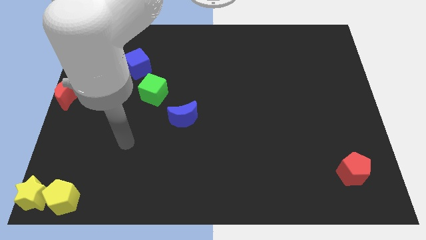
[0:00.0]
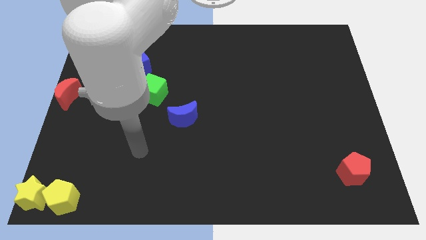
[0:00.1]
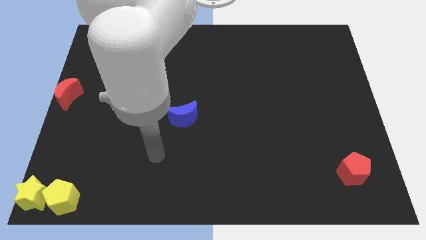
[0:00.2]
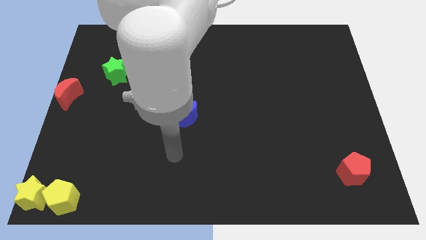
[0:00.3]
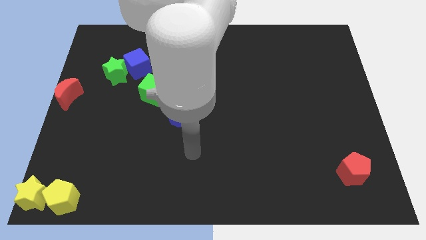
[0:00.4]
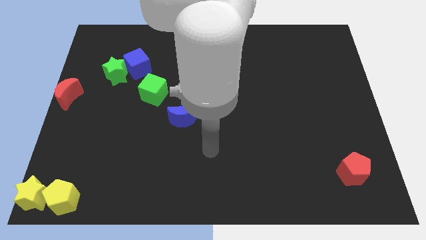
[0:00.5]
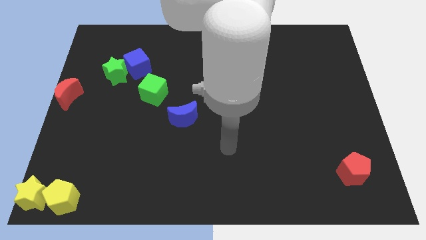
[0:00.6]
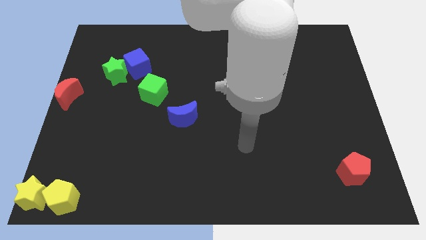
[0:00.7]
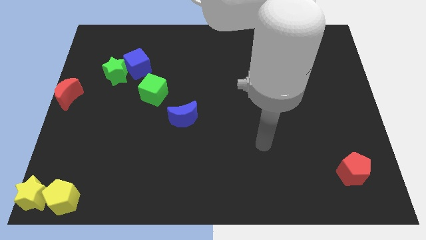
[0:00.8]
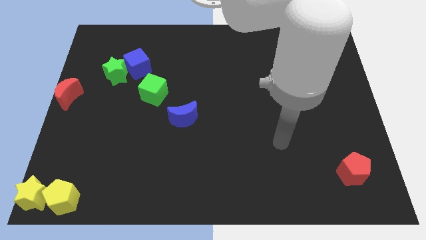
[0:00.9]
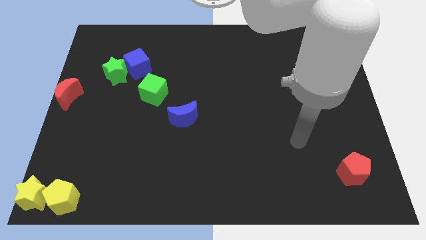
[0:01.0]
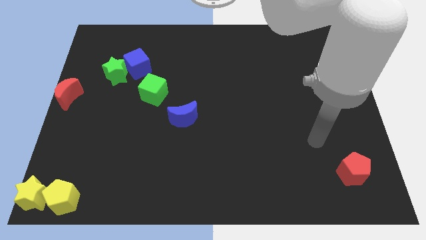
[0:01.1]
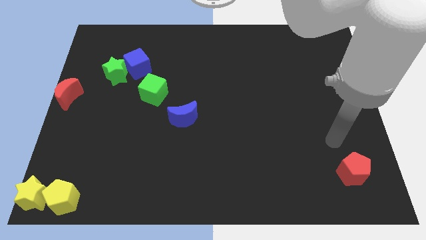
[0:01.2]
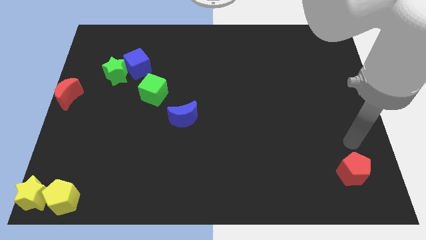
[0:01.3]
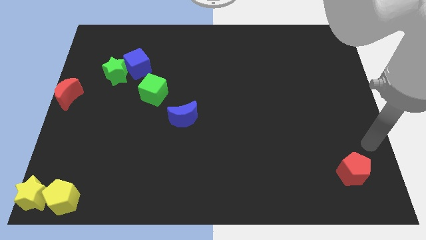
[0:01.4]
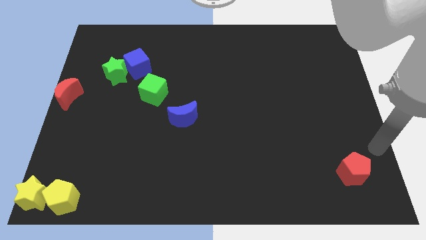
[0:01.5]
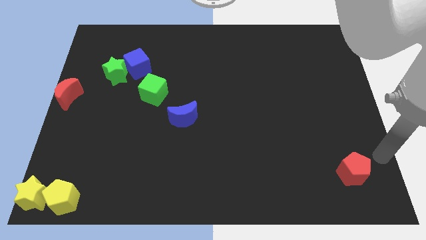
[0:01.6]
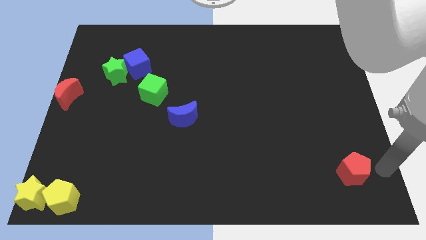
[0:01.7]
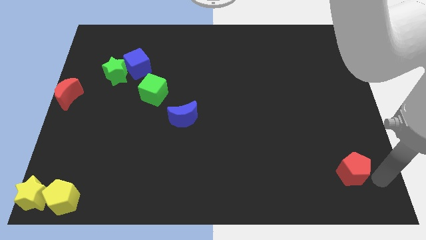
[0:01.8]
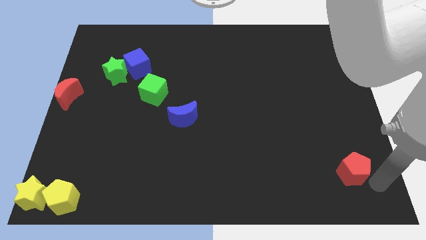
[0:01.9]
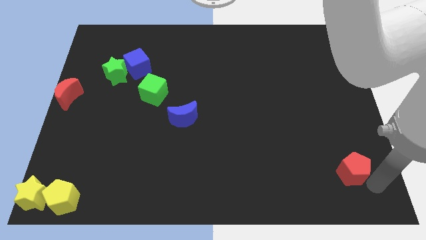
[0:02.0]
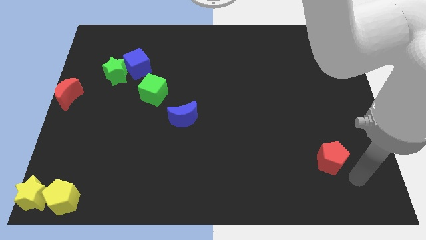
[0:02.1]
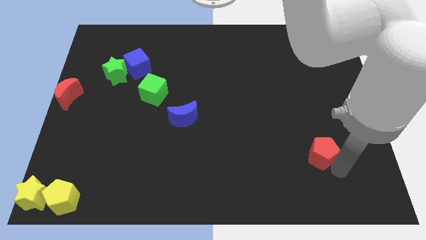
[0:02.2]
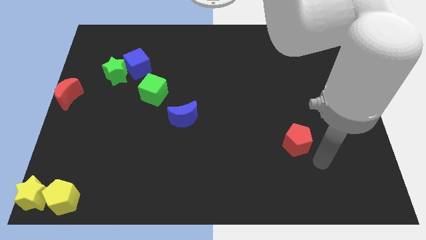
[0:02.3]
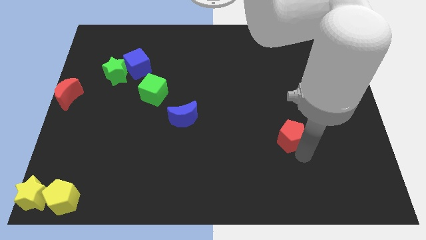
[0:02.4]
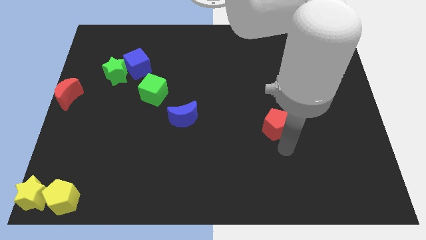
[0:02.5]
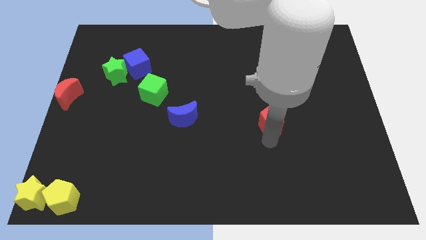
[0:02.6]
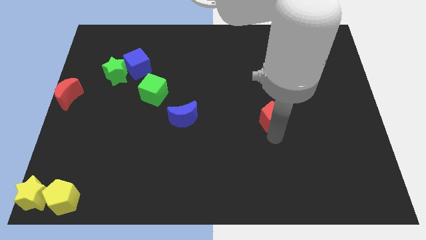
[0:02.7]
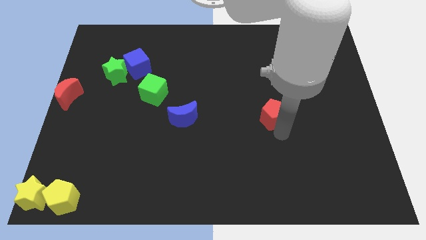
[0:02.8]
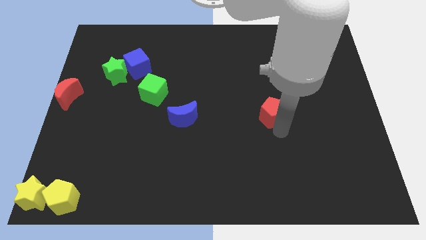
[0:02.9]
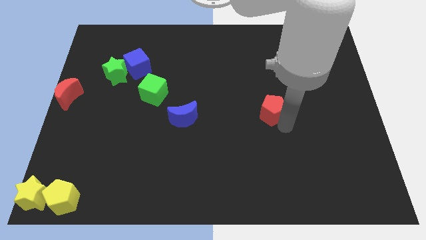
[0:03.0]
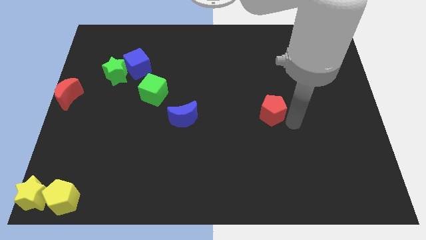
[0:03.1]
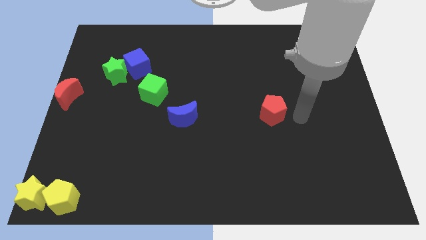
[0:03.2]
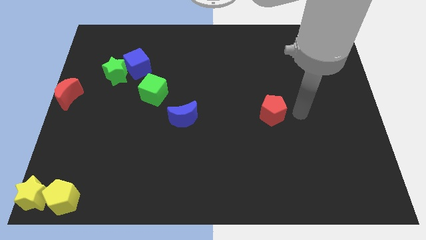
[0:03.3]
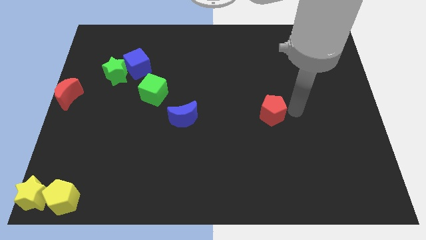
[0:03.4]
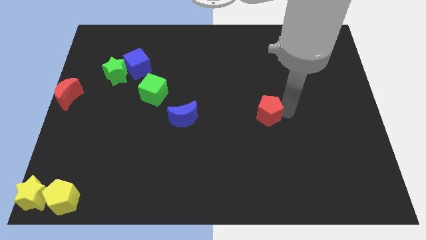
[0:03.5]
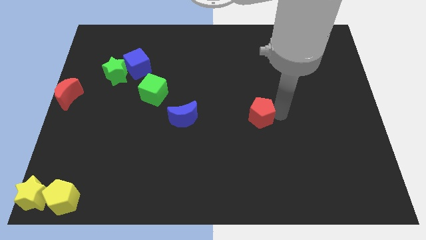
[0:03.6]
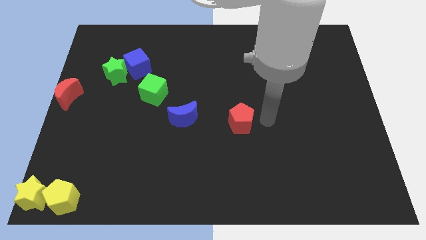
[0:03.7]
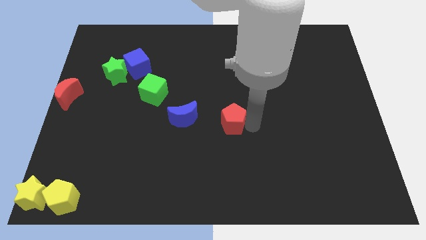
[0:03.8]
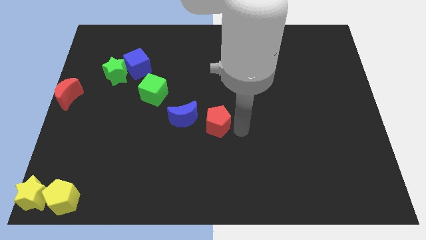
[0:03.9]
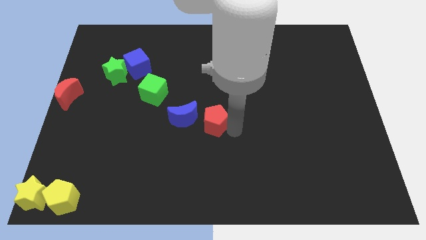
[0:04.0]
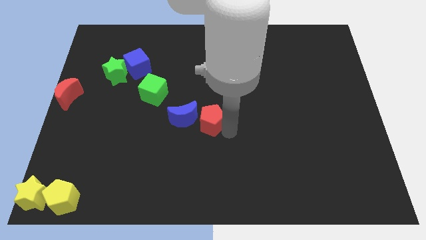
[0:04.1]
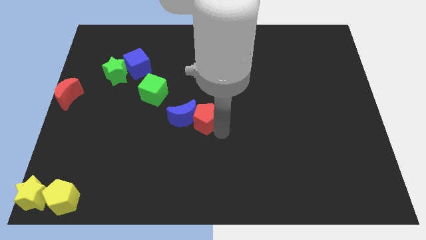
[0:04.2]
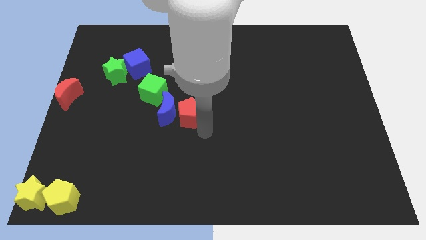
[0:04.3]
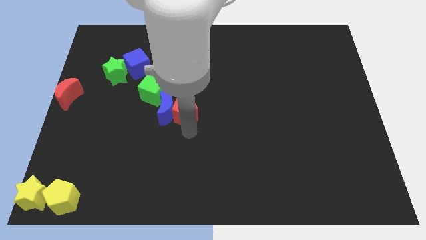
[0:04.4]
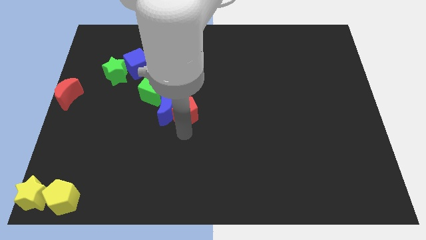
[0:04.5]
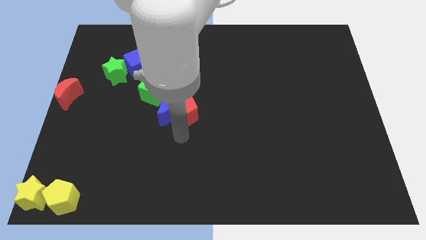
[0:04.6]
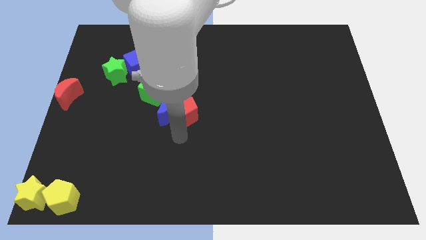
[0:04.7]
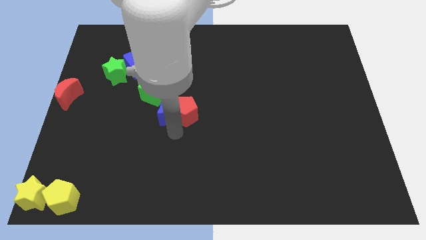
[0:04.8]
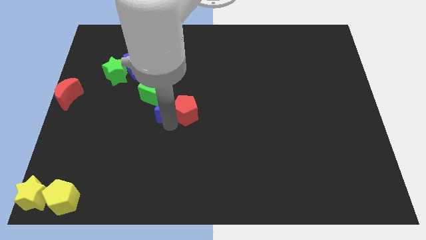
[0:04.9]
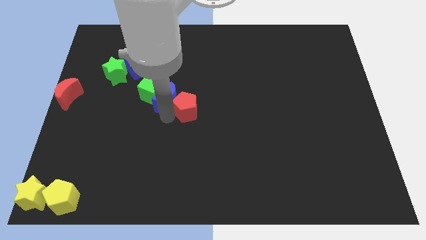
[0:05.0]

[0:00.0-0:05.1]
place the red pentagon at the right of the blue moon

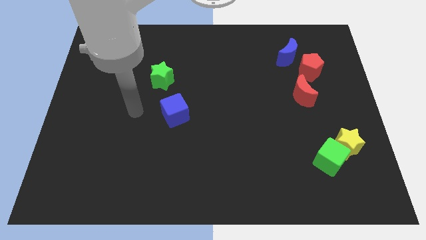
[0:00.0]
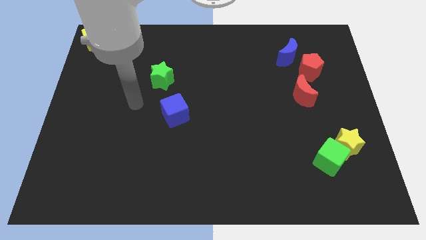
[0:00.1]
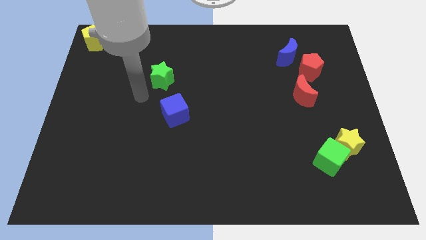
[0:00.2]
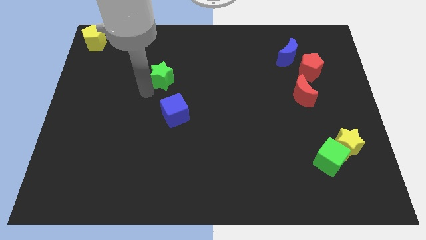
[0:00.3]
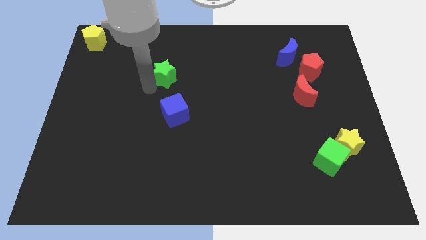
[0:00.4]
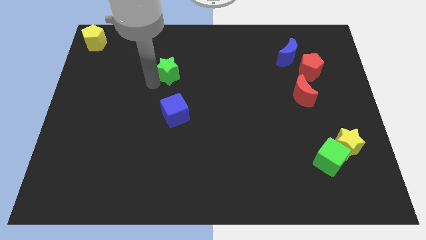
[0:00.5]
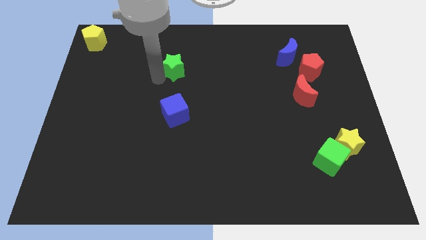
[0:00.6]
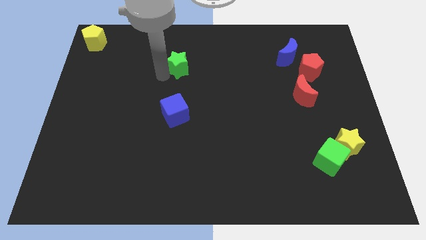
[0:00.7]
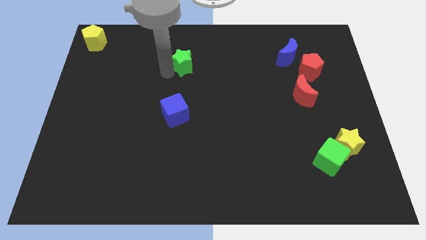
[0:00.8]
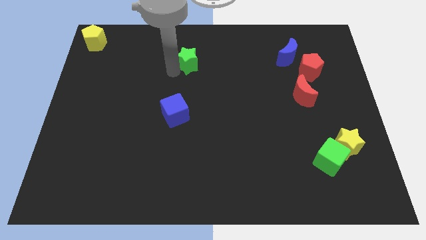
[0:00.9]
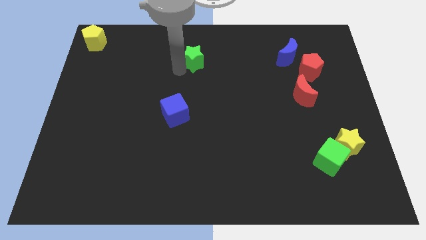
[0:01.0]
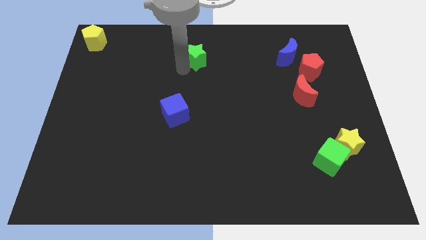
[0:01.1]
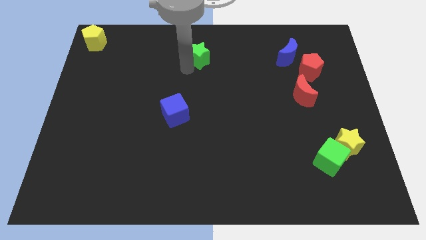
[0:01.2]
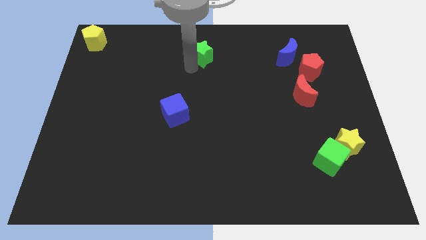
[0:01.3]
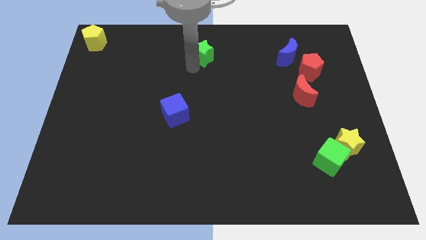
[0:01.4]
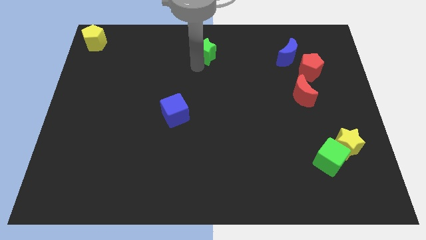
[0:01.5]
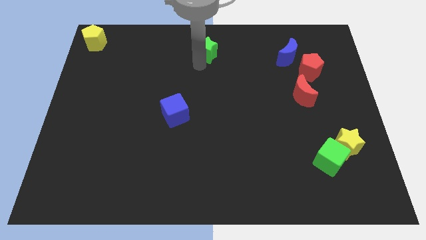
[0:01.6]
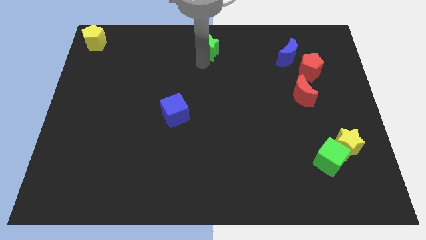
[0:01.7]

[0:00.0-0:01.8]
slide green star towards the top center of the board

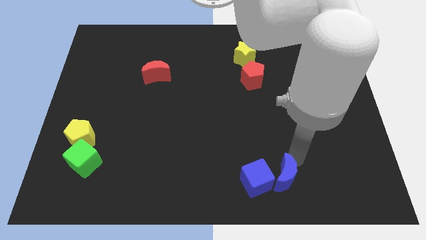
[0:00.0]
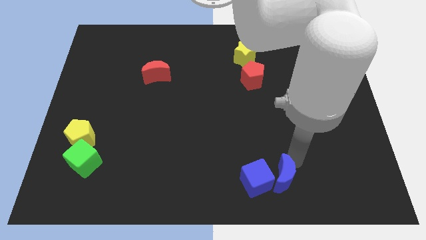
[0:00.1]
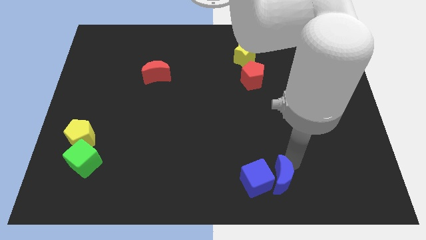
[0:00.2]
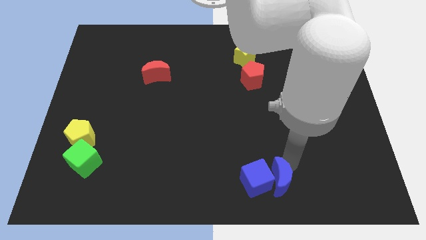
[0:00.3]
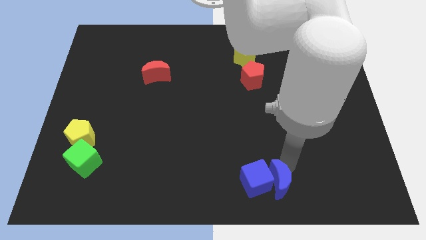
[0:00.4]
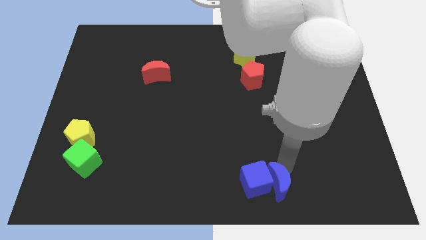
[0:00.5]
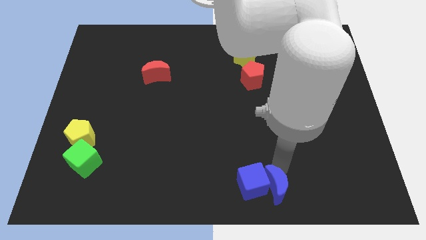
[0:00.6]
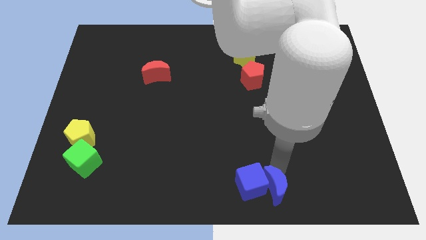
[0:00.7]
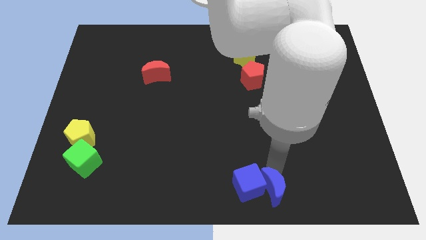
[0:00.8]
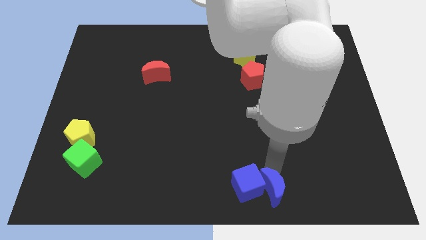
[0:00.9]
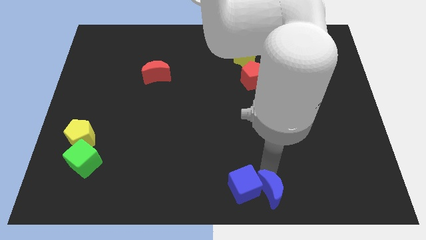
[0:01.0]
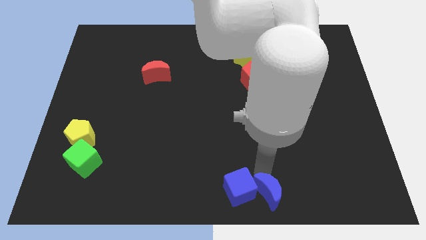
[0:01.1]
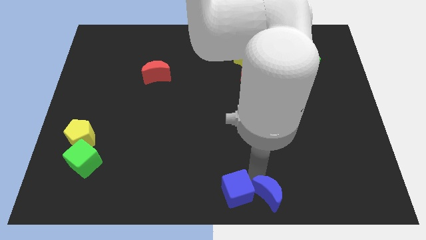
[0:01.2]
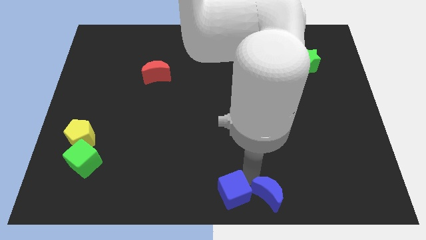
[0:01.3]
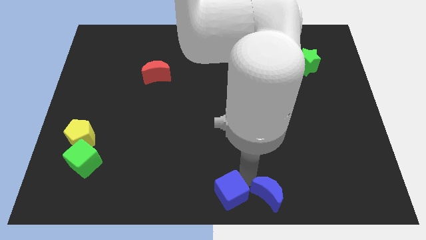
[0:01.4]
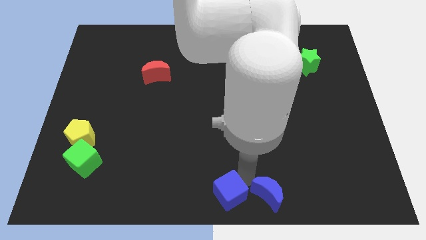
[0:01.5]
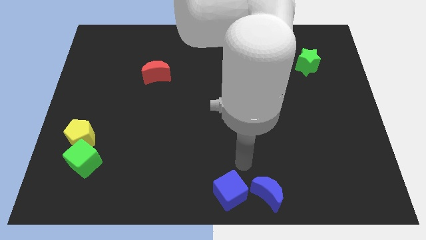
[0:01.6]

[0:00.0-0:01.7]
push the blue cube and blue crescent into the bottom center
